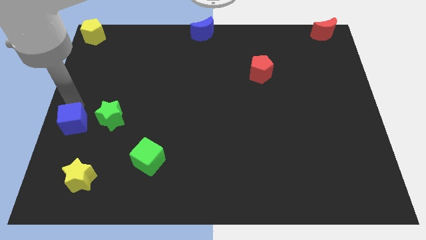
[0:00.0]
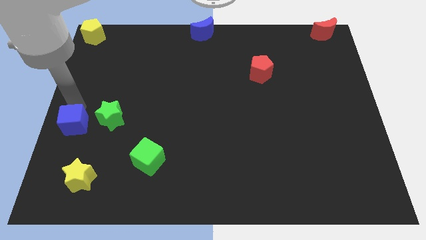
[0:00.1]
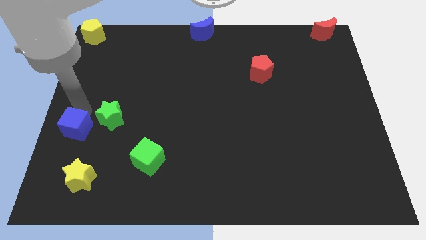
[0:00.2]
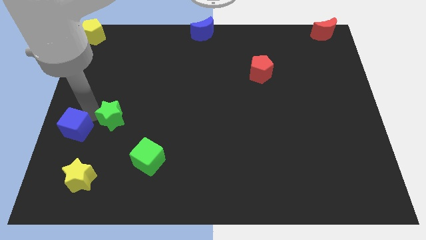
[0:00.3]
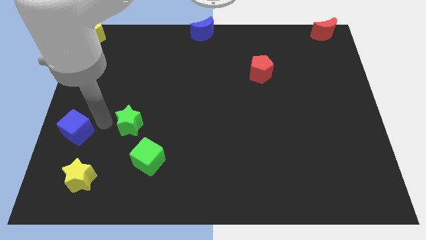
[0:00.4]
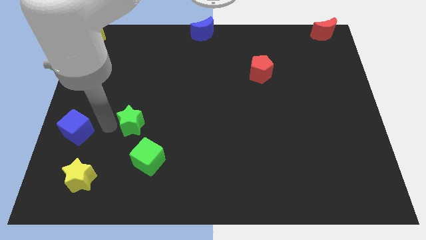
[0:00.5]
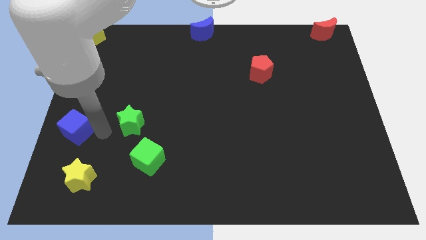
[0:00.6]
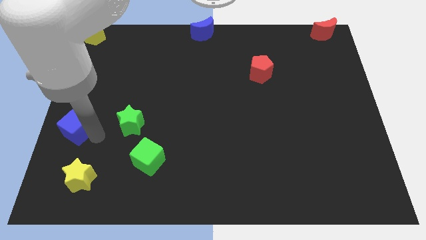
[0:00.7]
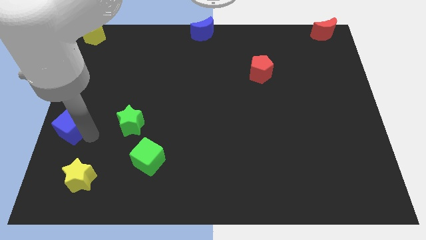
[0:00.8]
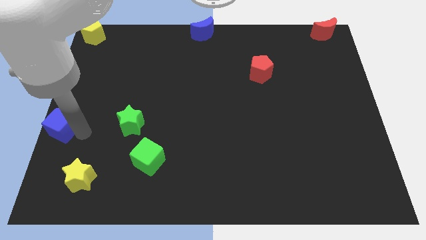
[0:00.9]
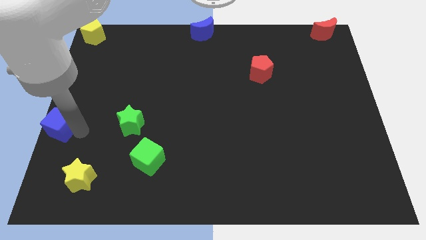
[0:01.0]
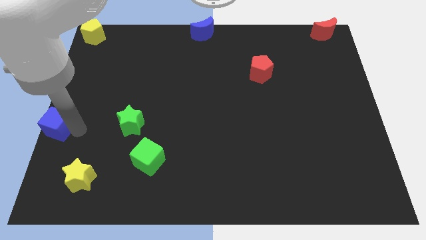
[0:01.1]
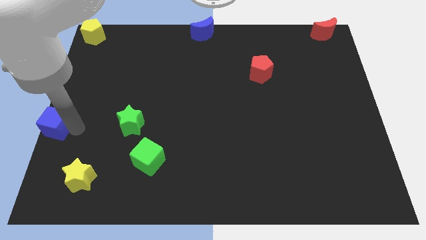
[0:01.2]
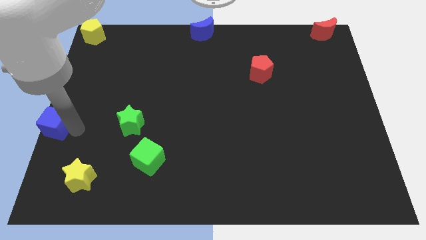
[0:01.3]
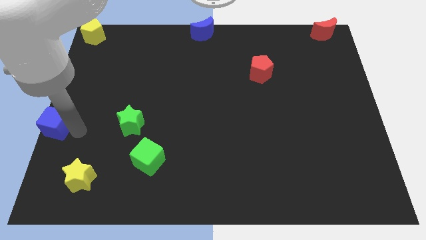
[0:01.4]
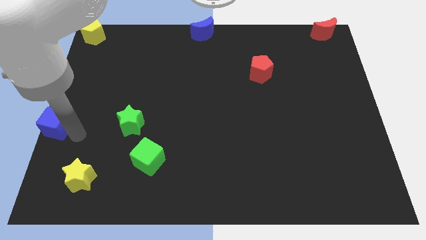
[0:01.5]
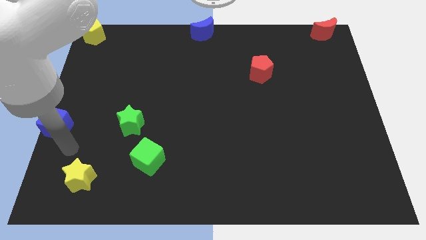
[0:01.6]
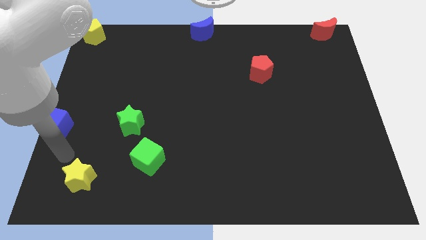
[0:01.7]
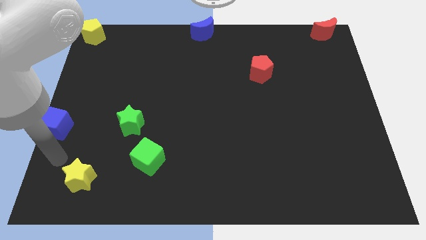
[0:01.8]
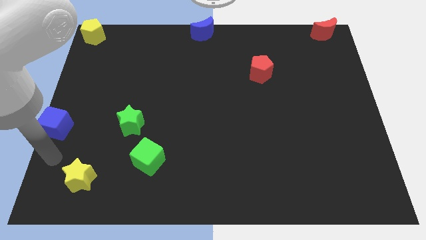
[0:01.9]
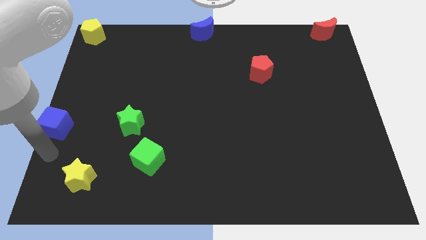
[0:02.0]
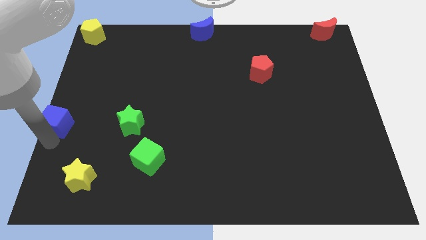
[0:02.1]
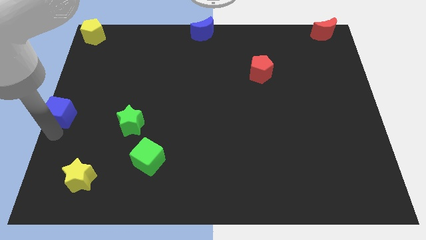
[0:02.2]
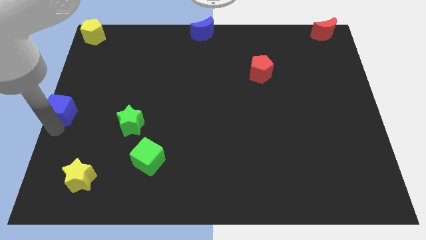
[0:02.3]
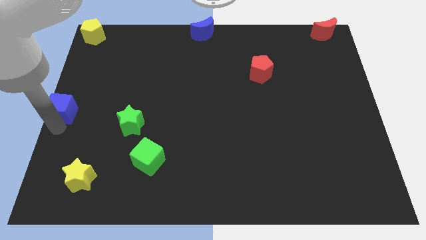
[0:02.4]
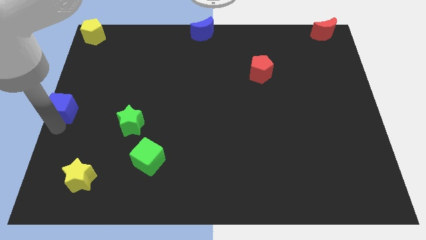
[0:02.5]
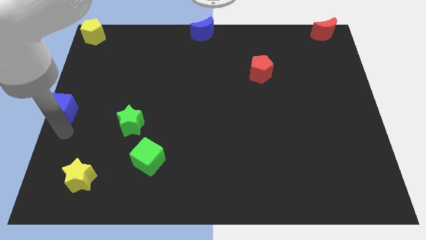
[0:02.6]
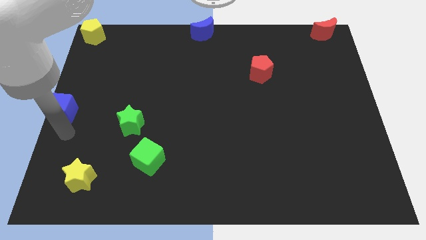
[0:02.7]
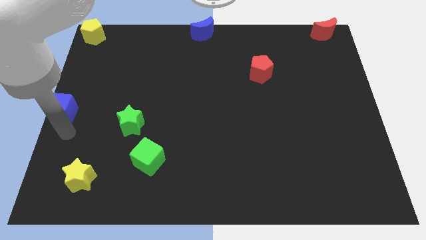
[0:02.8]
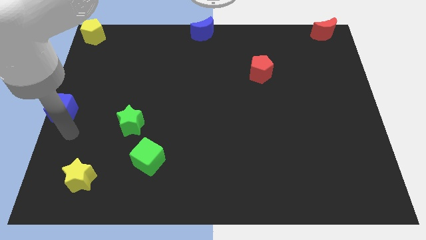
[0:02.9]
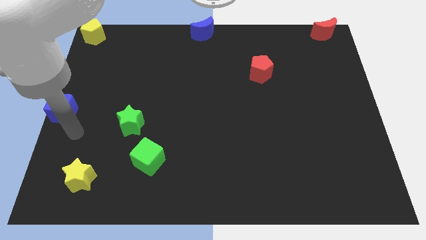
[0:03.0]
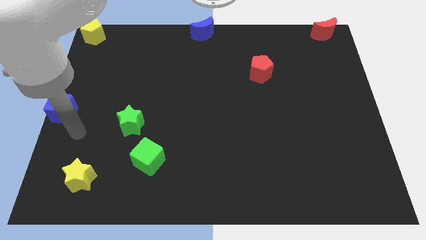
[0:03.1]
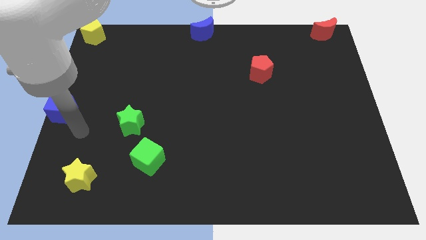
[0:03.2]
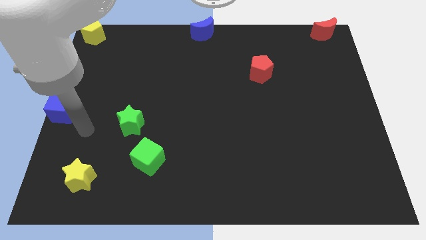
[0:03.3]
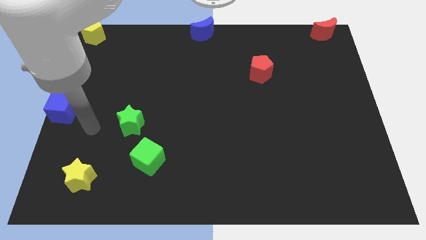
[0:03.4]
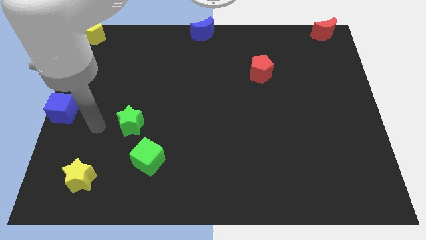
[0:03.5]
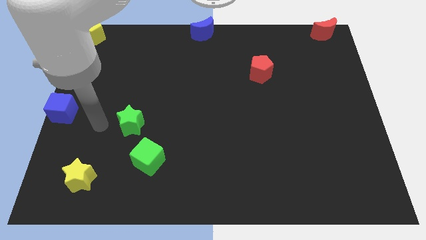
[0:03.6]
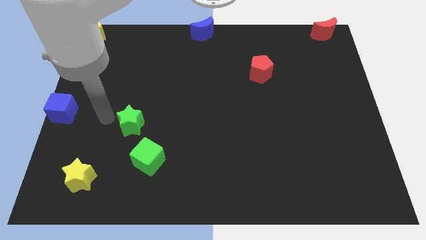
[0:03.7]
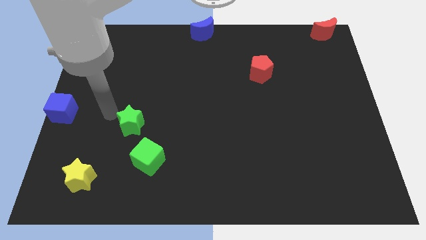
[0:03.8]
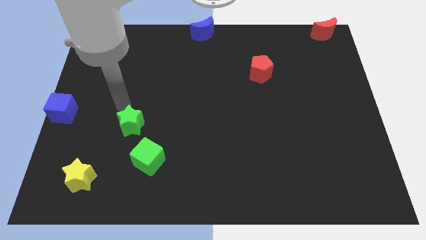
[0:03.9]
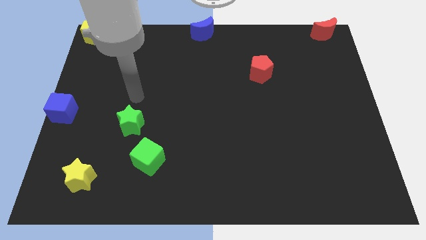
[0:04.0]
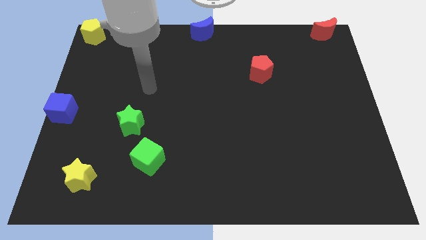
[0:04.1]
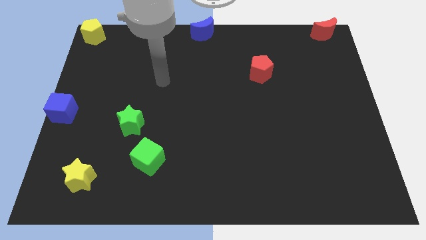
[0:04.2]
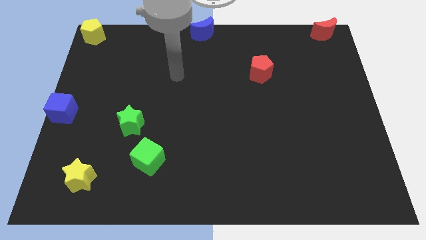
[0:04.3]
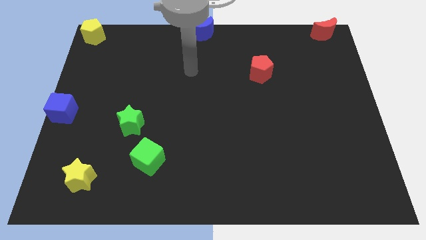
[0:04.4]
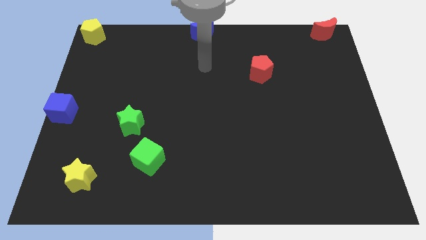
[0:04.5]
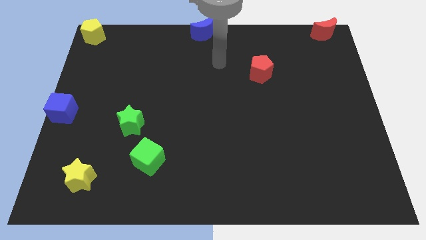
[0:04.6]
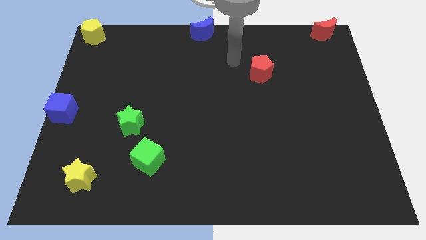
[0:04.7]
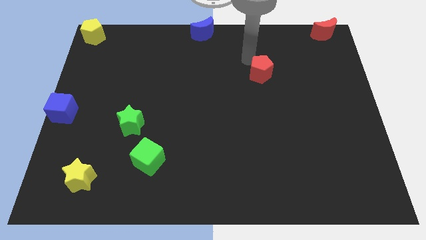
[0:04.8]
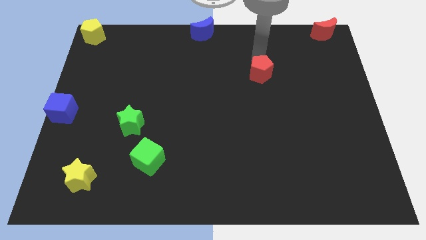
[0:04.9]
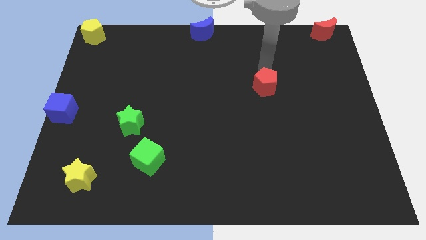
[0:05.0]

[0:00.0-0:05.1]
move the blue cube to the center left of the board

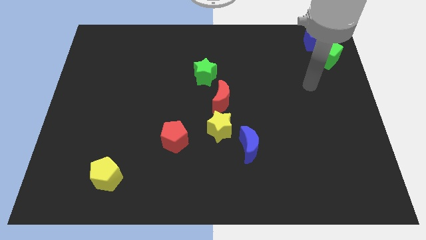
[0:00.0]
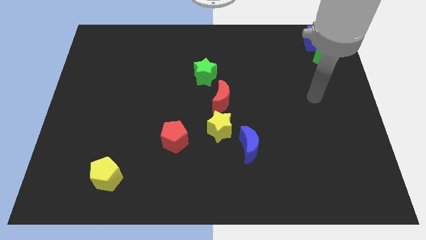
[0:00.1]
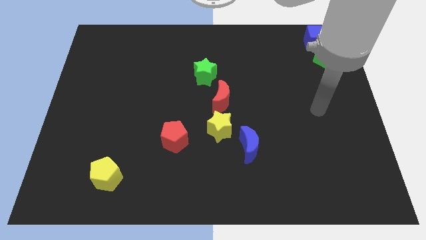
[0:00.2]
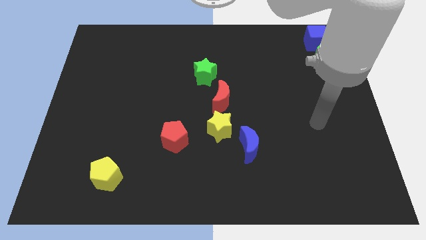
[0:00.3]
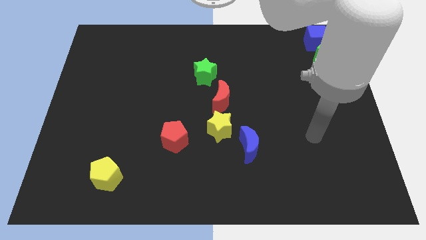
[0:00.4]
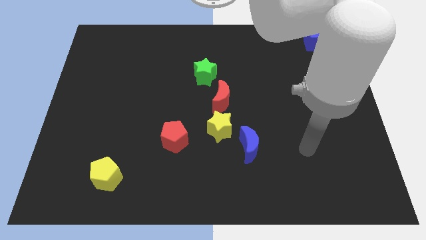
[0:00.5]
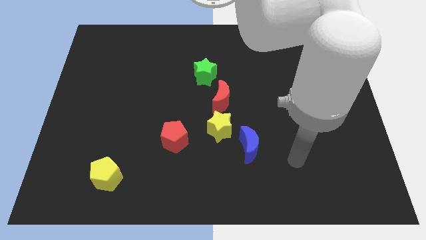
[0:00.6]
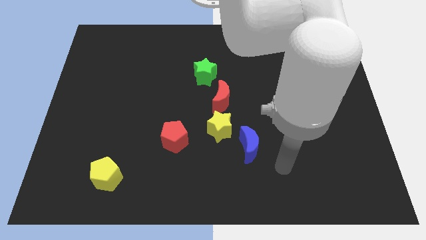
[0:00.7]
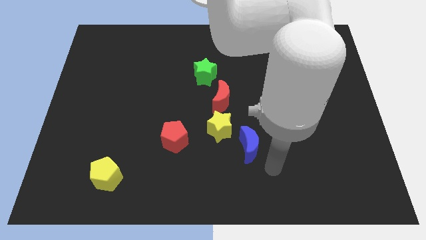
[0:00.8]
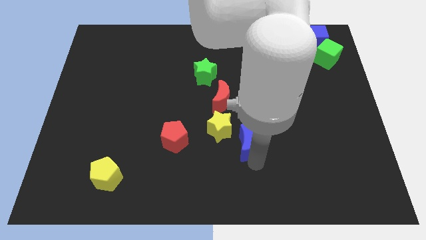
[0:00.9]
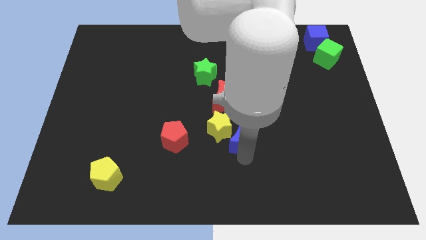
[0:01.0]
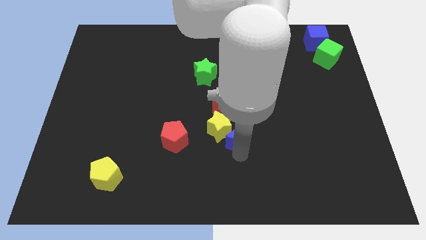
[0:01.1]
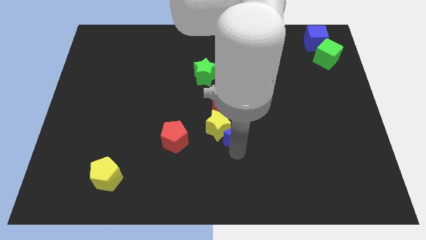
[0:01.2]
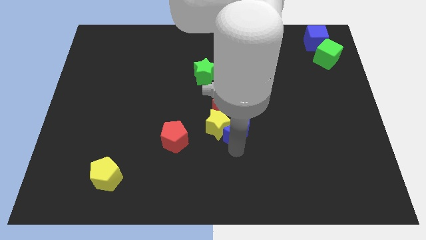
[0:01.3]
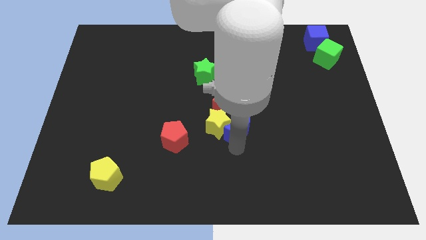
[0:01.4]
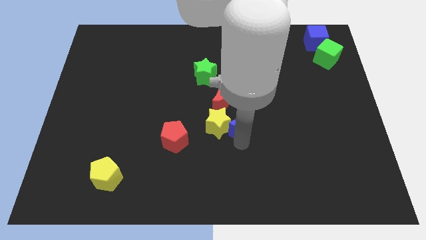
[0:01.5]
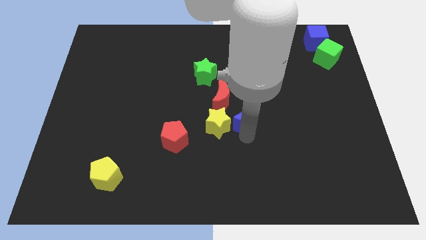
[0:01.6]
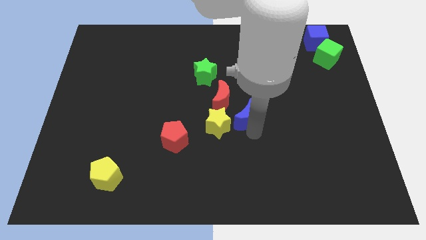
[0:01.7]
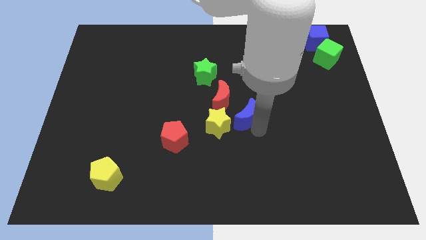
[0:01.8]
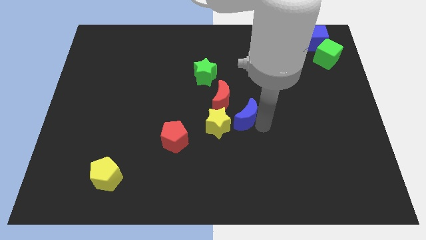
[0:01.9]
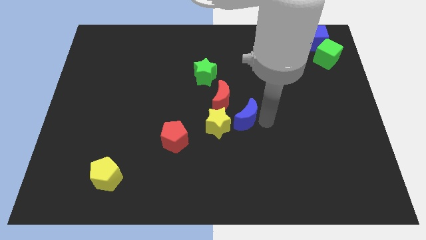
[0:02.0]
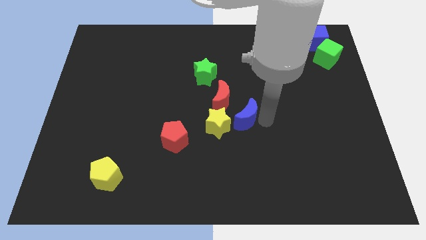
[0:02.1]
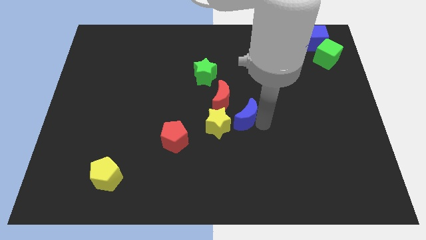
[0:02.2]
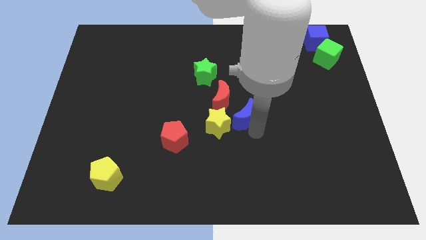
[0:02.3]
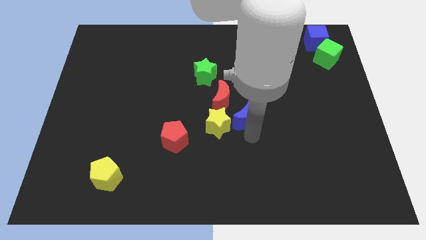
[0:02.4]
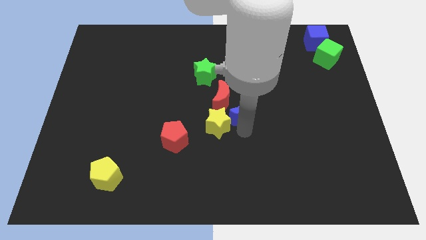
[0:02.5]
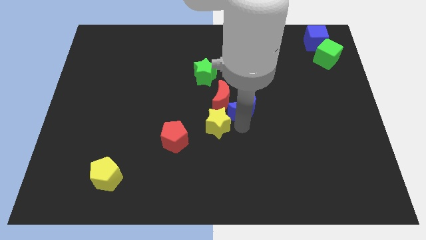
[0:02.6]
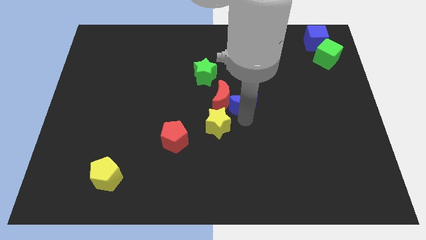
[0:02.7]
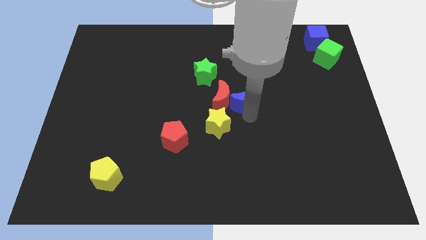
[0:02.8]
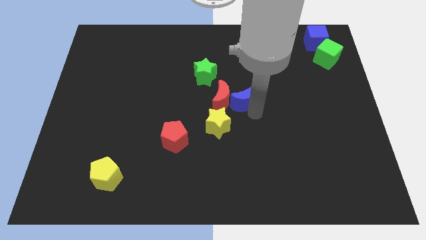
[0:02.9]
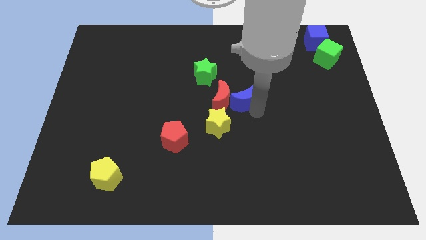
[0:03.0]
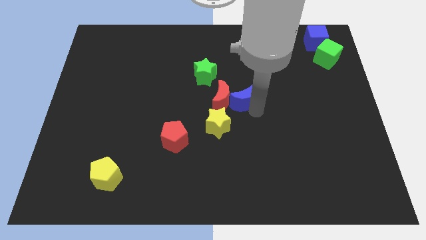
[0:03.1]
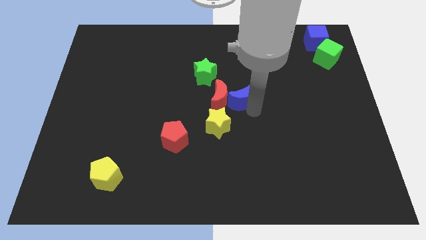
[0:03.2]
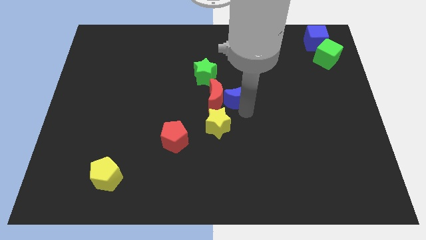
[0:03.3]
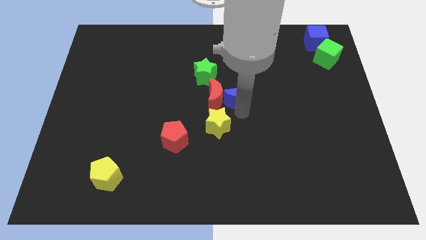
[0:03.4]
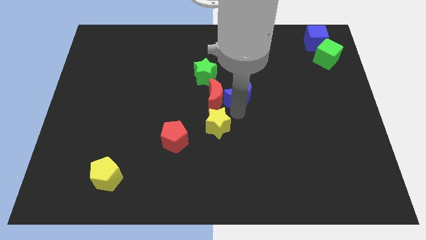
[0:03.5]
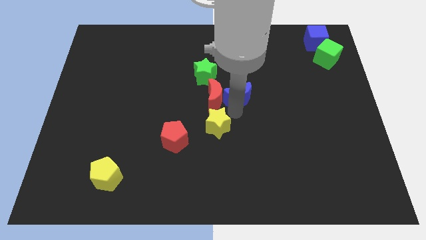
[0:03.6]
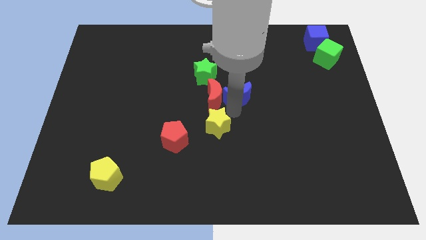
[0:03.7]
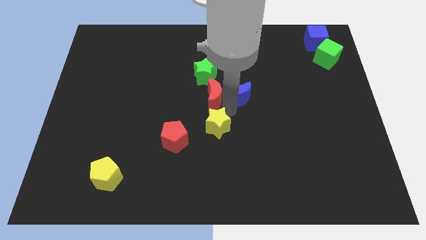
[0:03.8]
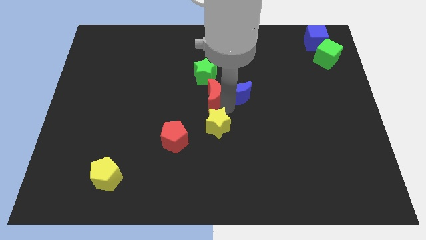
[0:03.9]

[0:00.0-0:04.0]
push the blue crescent to the right of the red crescent
